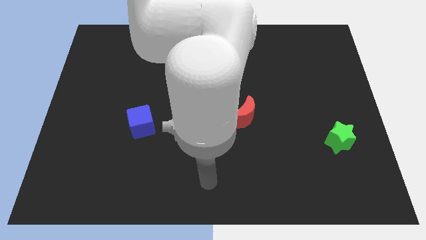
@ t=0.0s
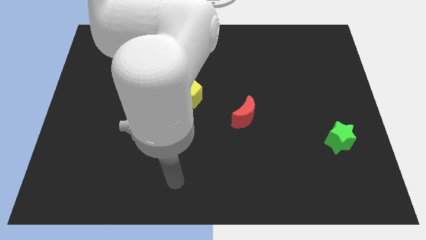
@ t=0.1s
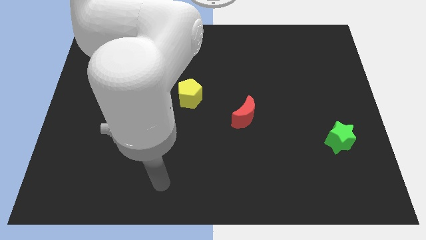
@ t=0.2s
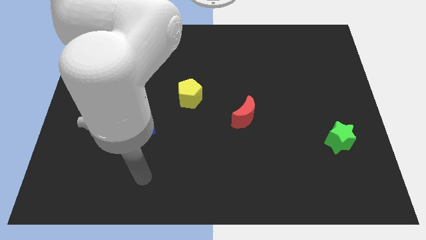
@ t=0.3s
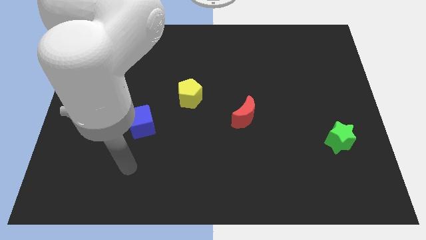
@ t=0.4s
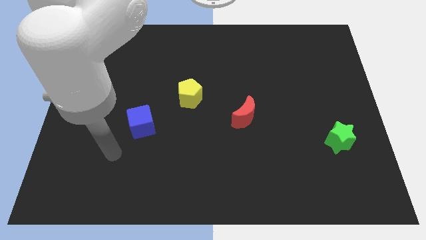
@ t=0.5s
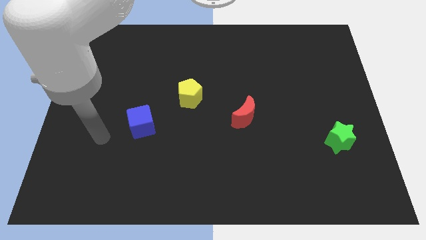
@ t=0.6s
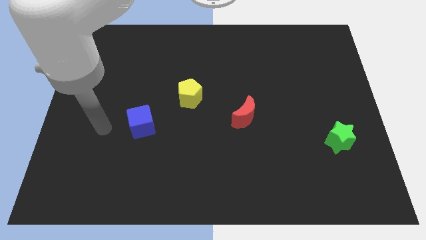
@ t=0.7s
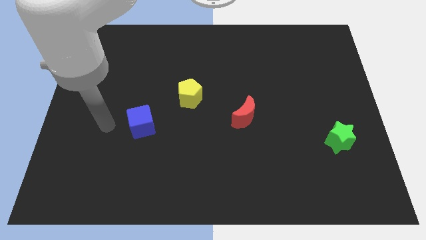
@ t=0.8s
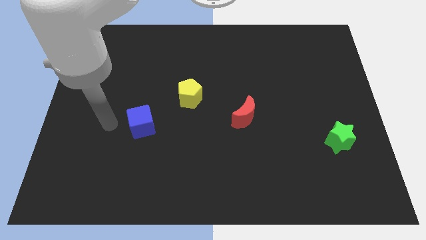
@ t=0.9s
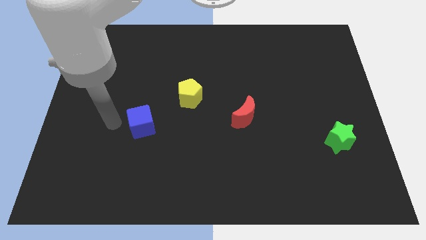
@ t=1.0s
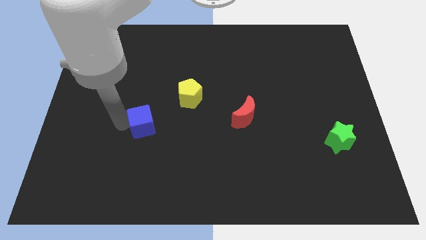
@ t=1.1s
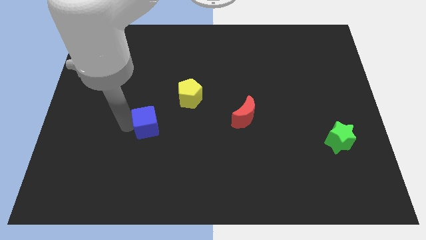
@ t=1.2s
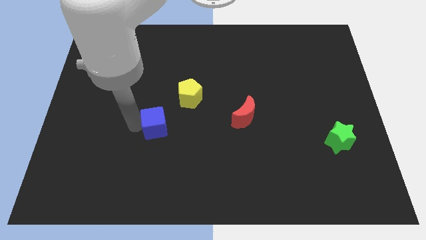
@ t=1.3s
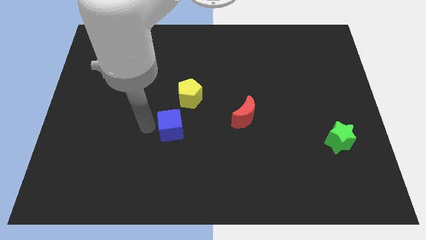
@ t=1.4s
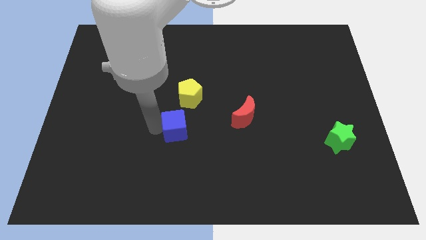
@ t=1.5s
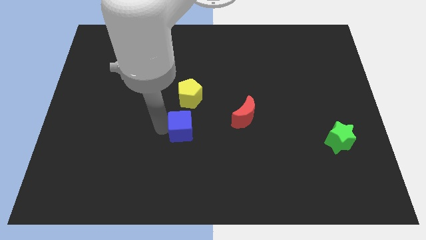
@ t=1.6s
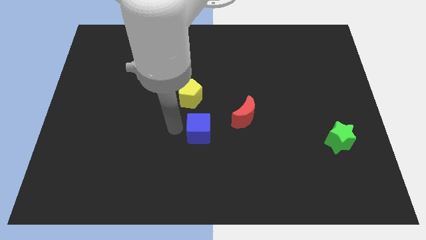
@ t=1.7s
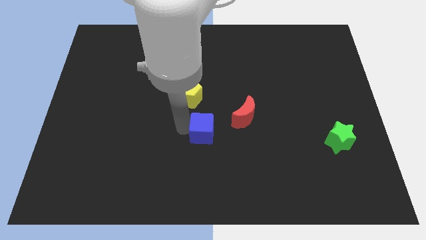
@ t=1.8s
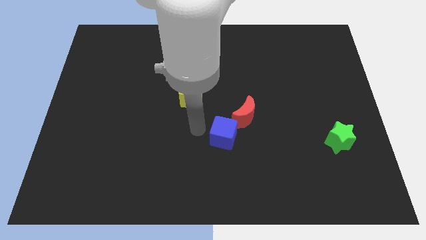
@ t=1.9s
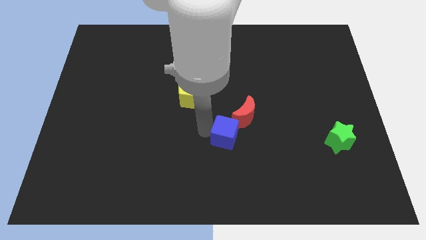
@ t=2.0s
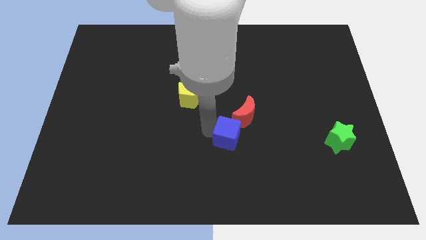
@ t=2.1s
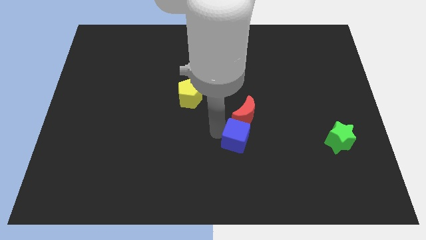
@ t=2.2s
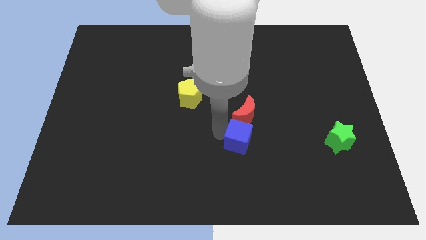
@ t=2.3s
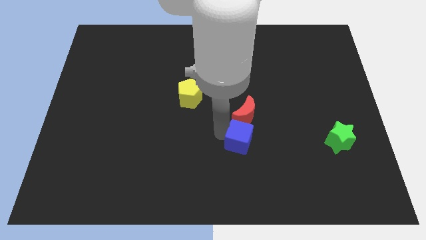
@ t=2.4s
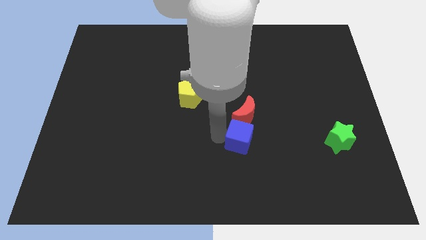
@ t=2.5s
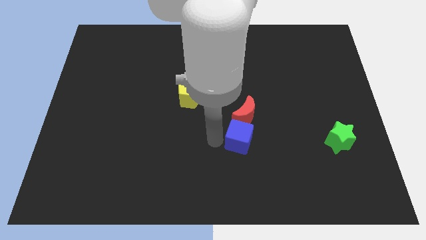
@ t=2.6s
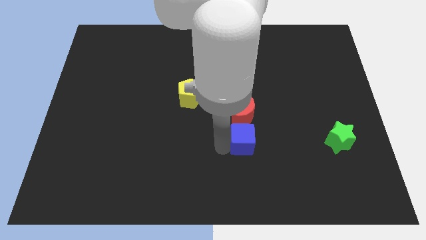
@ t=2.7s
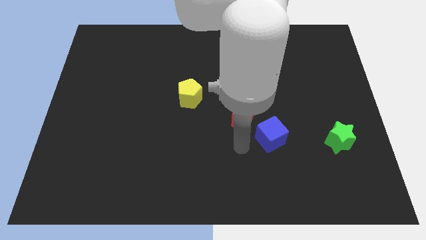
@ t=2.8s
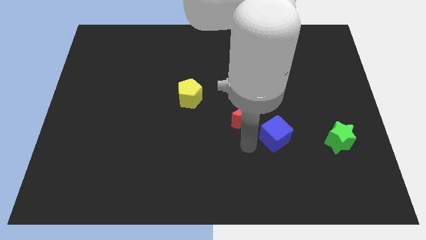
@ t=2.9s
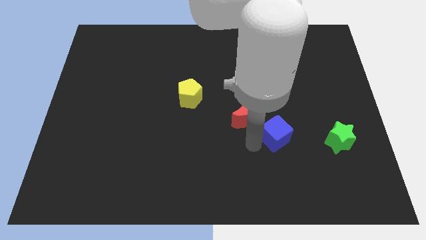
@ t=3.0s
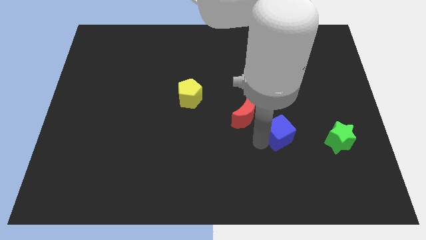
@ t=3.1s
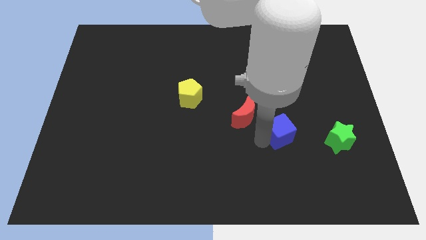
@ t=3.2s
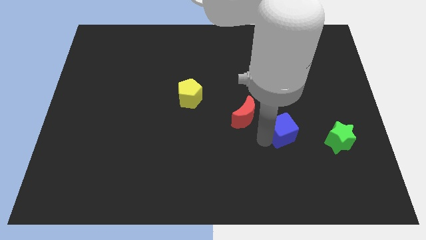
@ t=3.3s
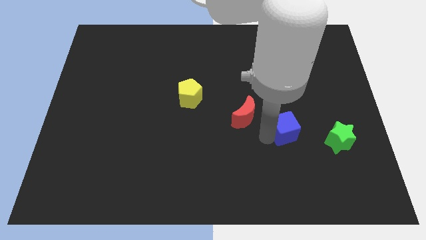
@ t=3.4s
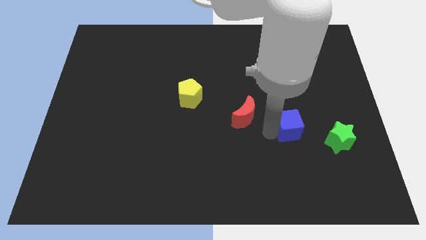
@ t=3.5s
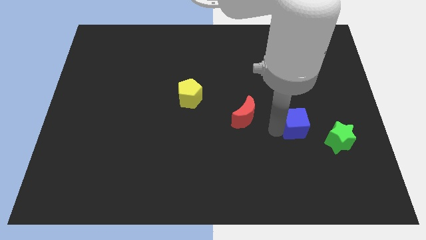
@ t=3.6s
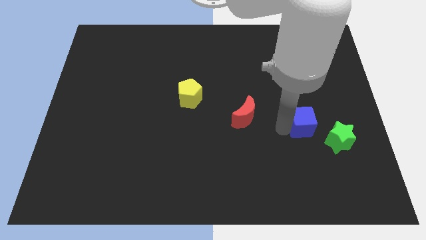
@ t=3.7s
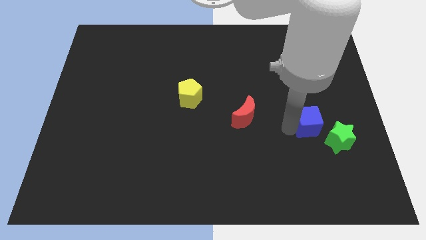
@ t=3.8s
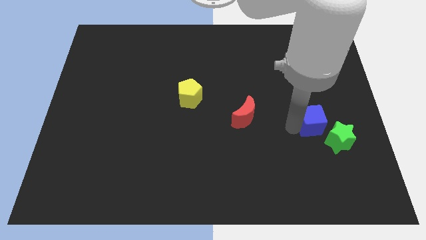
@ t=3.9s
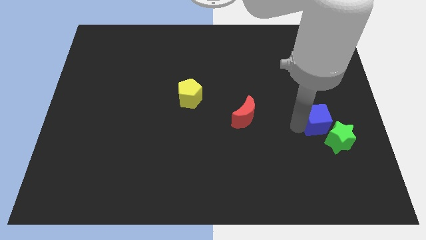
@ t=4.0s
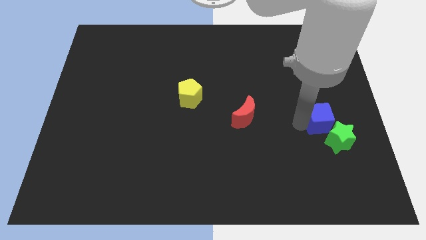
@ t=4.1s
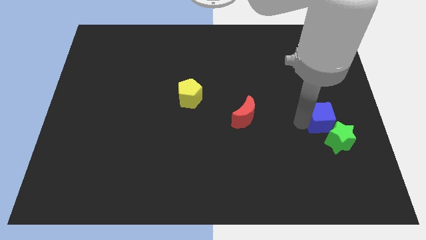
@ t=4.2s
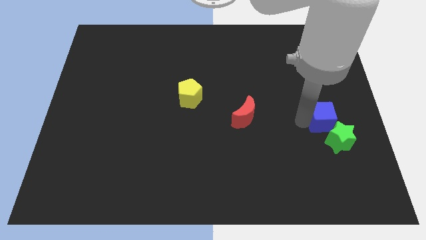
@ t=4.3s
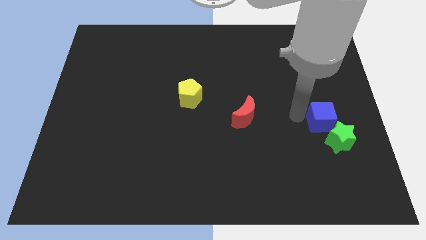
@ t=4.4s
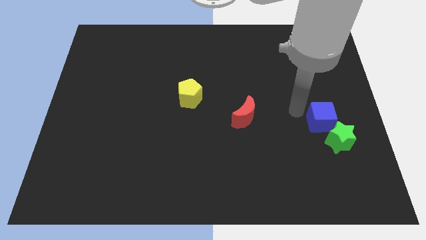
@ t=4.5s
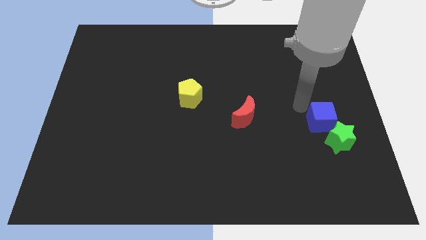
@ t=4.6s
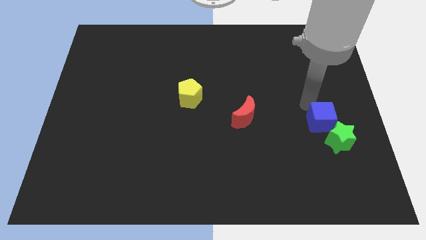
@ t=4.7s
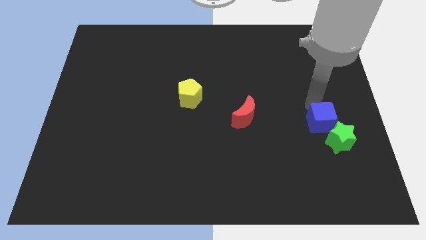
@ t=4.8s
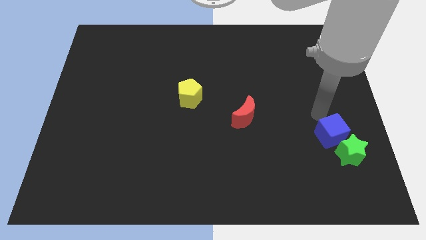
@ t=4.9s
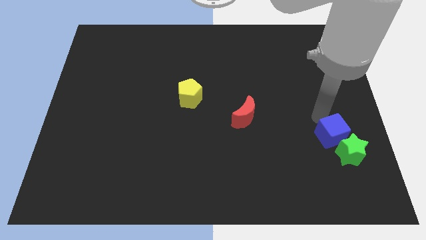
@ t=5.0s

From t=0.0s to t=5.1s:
slide the blue block to the green block

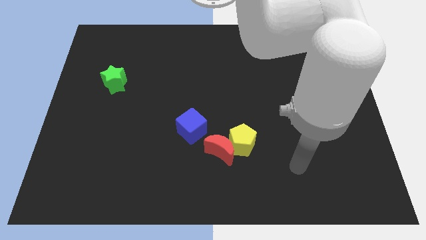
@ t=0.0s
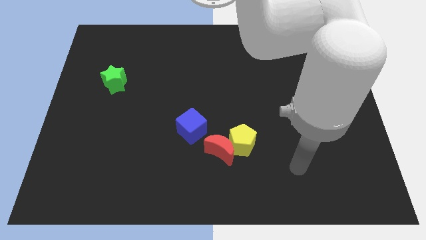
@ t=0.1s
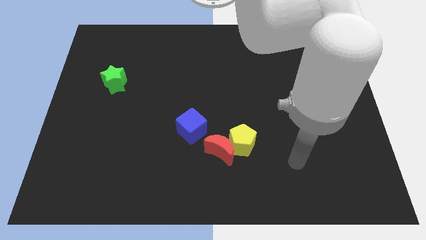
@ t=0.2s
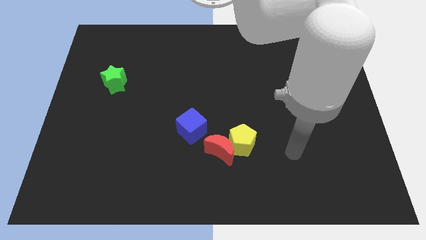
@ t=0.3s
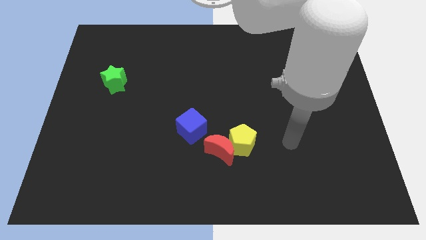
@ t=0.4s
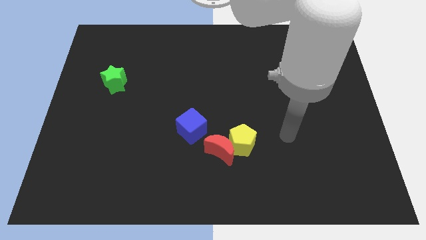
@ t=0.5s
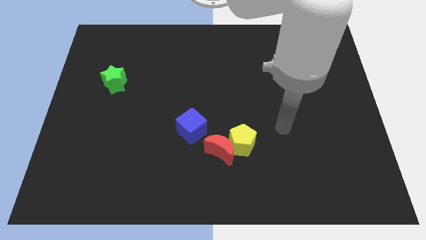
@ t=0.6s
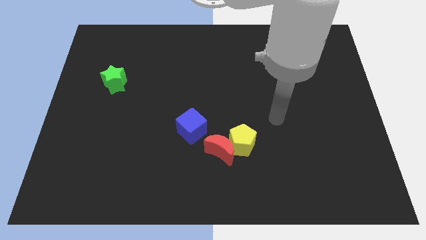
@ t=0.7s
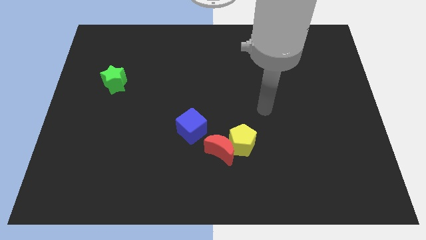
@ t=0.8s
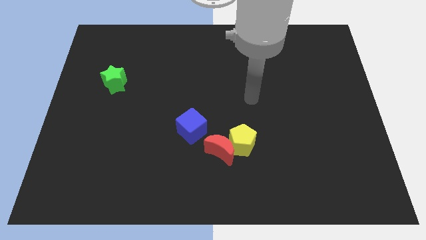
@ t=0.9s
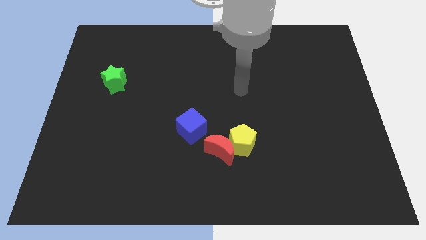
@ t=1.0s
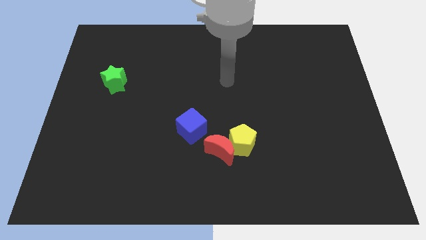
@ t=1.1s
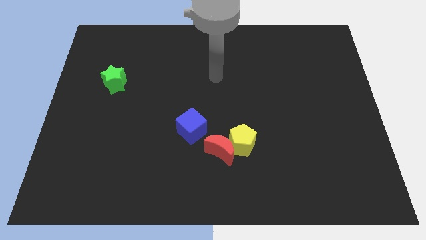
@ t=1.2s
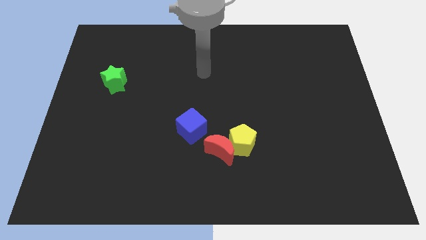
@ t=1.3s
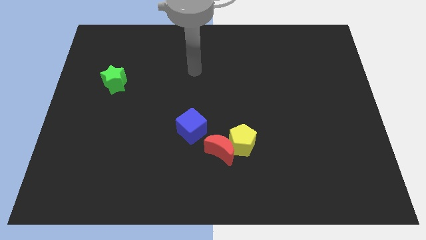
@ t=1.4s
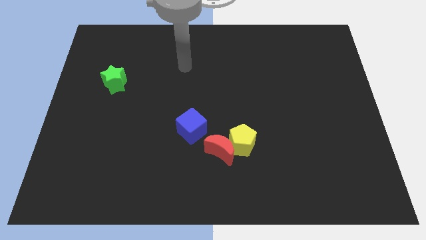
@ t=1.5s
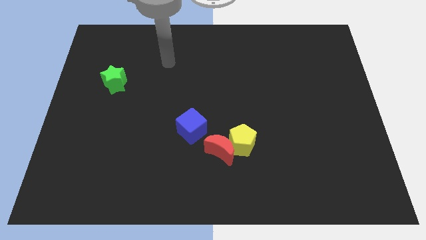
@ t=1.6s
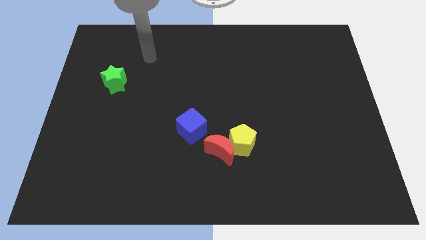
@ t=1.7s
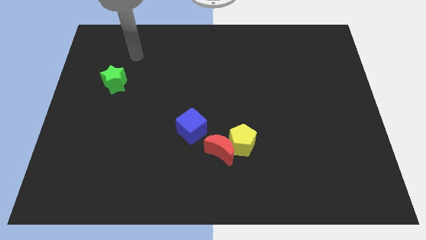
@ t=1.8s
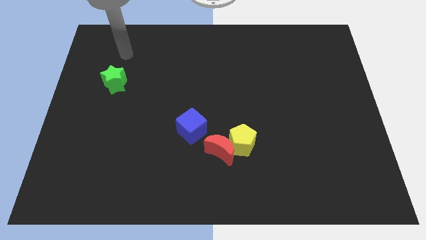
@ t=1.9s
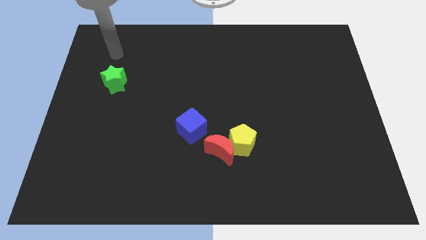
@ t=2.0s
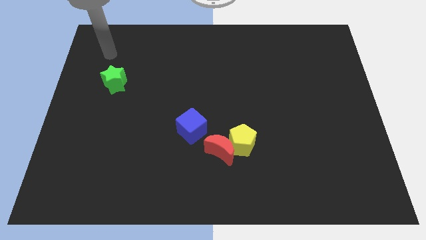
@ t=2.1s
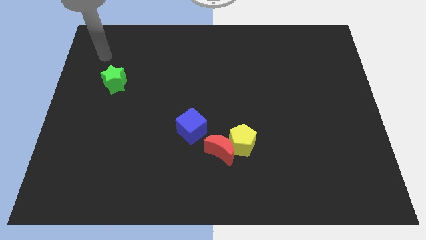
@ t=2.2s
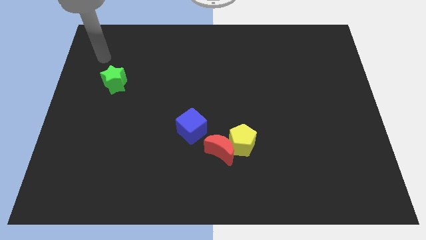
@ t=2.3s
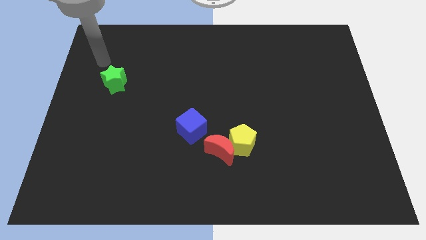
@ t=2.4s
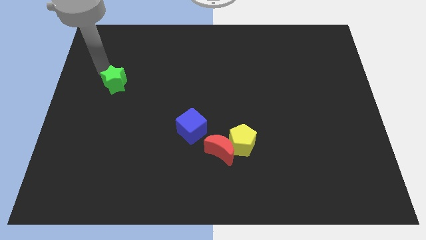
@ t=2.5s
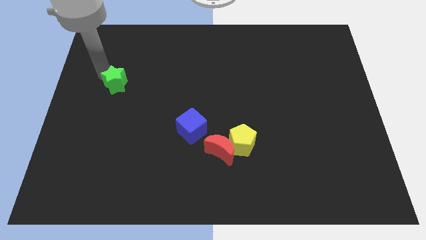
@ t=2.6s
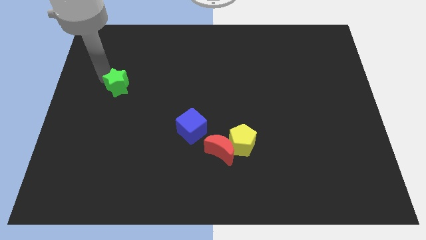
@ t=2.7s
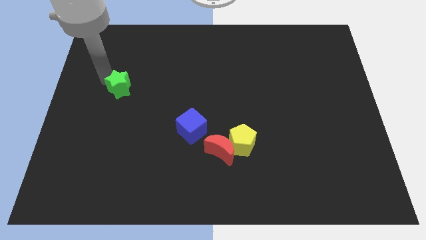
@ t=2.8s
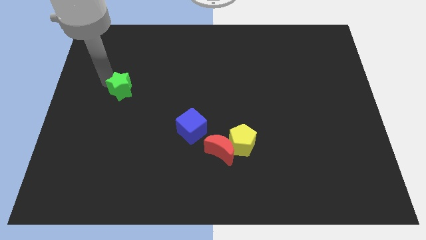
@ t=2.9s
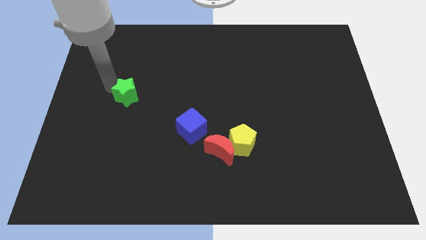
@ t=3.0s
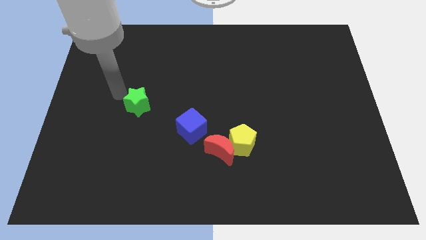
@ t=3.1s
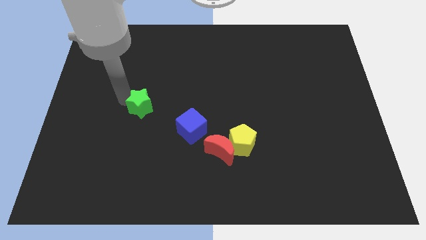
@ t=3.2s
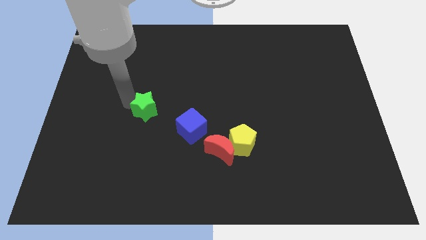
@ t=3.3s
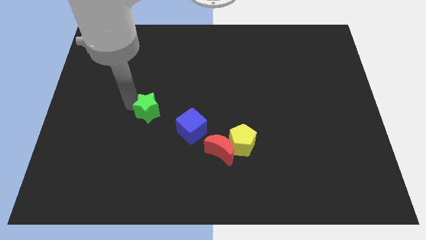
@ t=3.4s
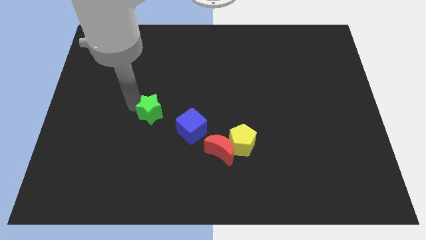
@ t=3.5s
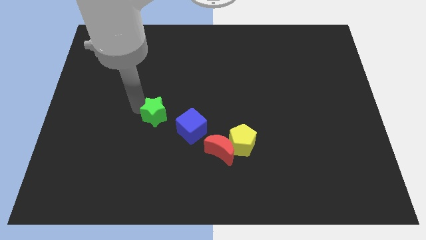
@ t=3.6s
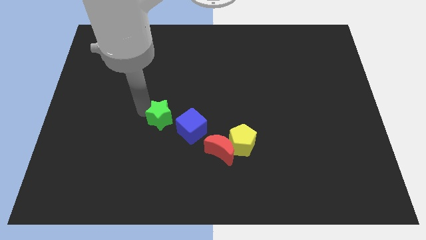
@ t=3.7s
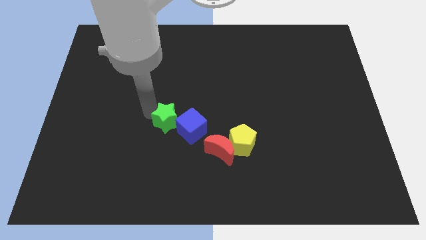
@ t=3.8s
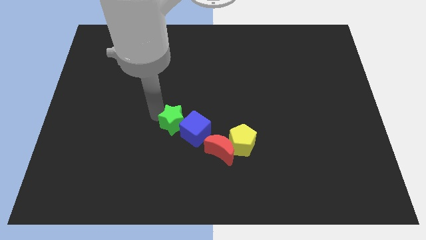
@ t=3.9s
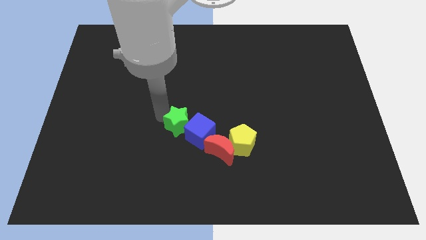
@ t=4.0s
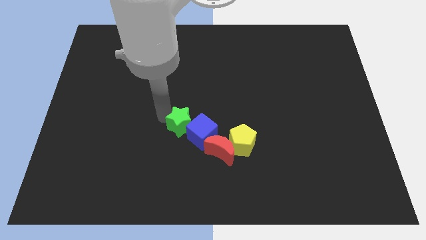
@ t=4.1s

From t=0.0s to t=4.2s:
put the star to the blue cube
